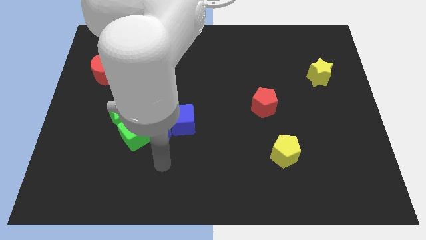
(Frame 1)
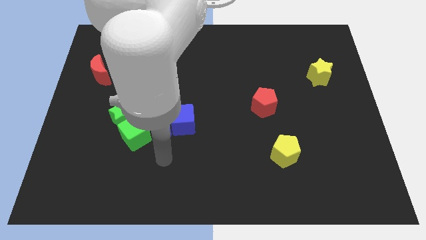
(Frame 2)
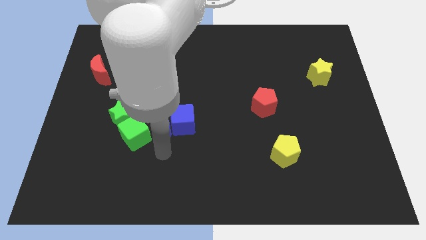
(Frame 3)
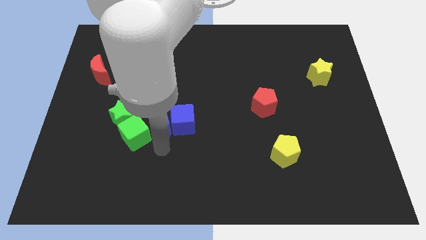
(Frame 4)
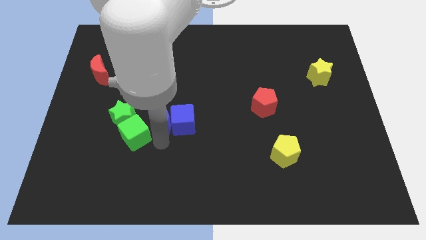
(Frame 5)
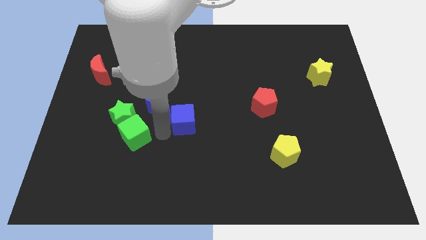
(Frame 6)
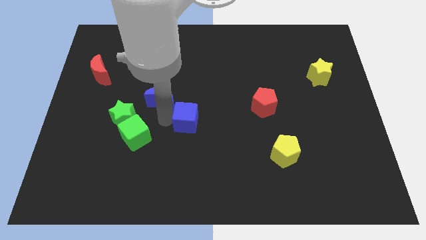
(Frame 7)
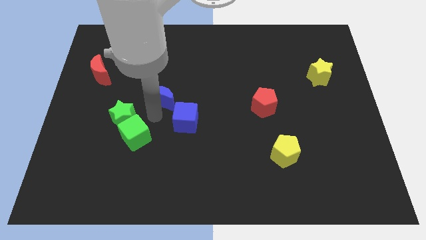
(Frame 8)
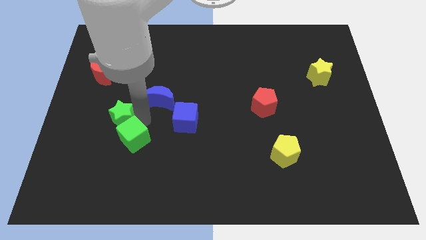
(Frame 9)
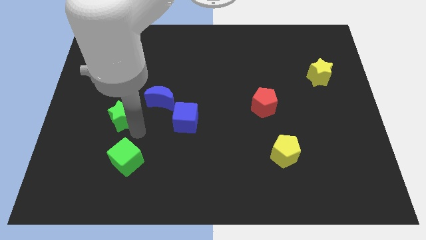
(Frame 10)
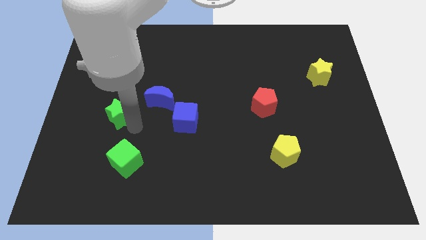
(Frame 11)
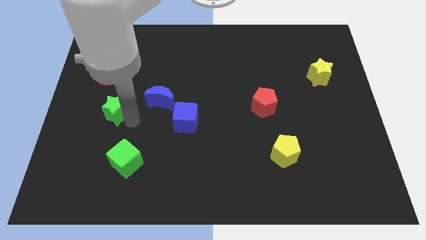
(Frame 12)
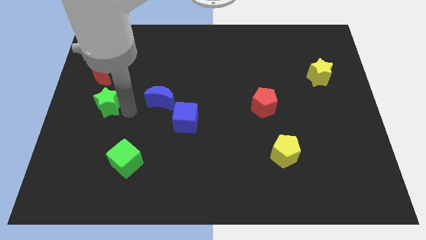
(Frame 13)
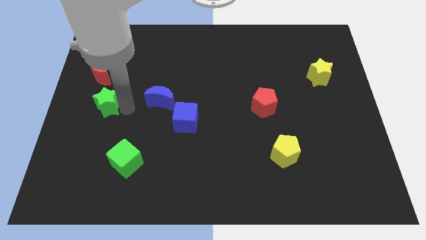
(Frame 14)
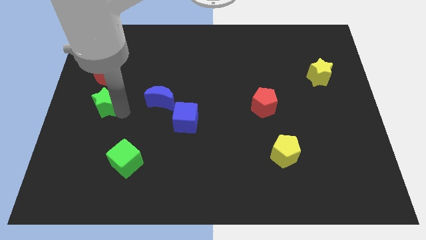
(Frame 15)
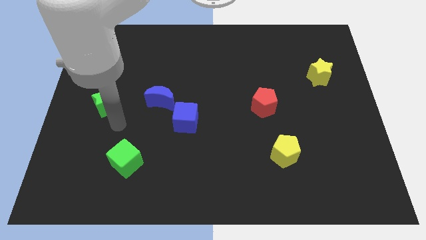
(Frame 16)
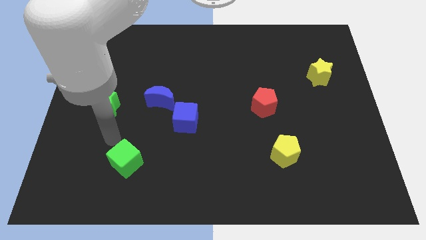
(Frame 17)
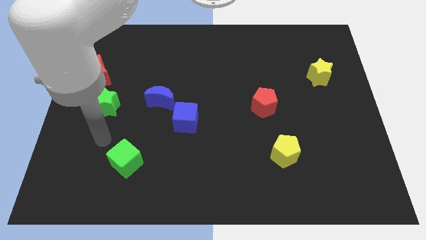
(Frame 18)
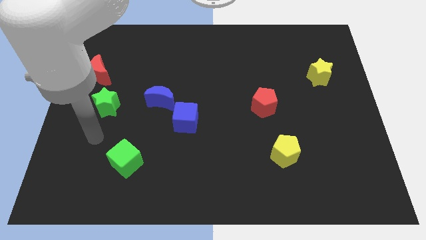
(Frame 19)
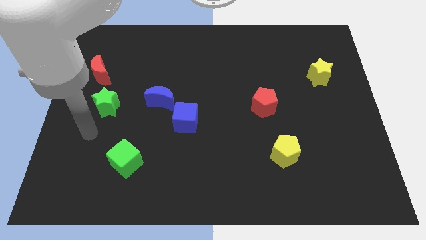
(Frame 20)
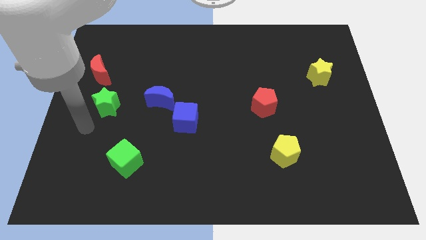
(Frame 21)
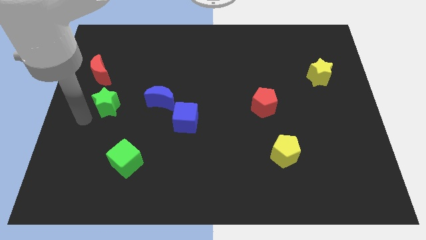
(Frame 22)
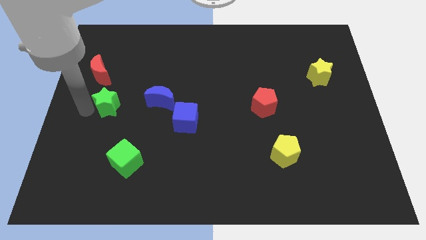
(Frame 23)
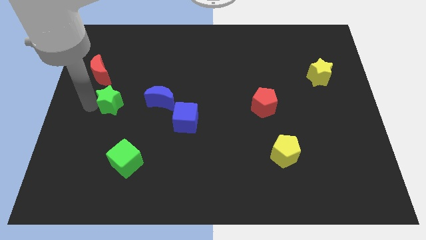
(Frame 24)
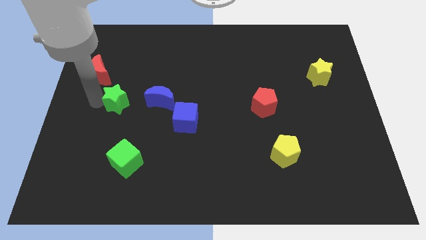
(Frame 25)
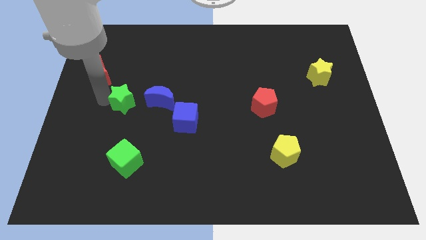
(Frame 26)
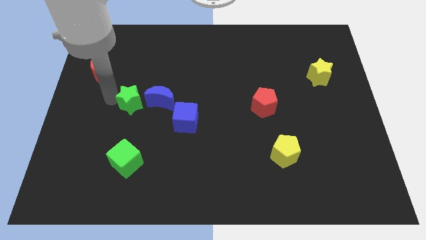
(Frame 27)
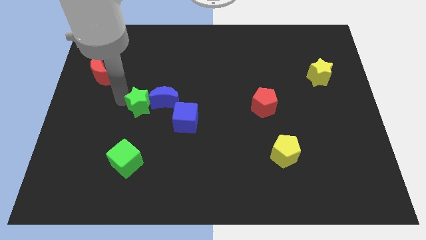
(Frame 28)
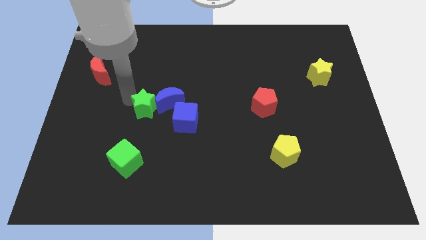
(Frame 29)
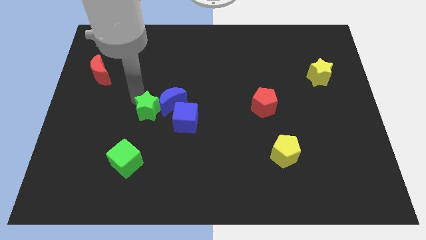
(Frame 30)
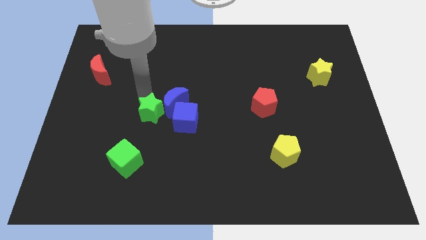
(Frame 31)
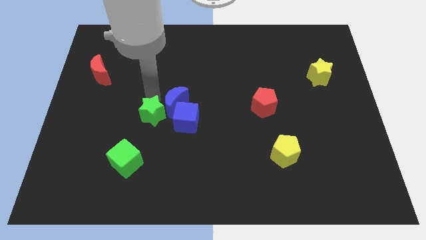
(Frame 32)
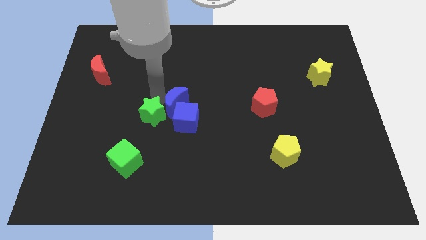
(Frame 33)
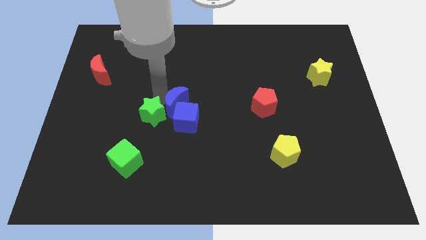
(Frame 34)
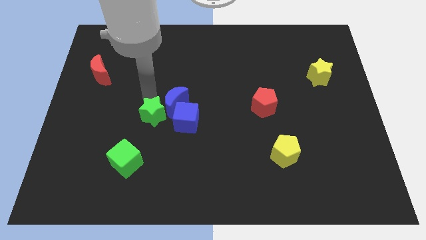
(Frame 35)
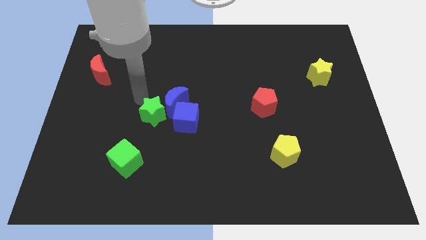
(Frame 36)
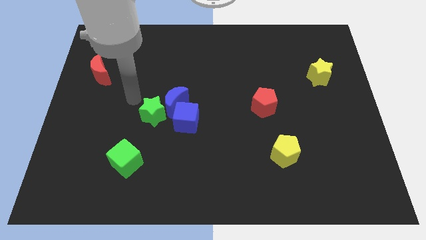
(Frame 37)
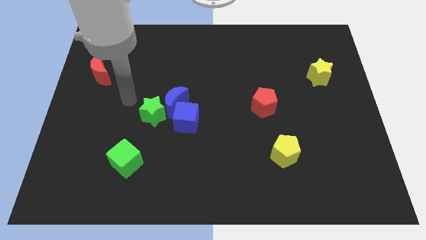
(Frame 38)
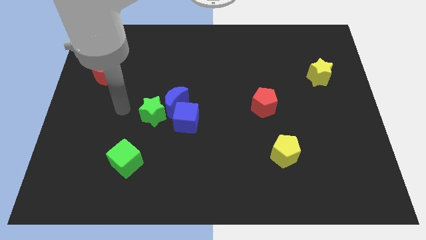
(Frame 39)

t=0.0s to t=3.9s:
separate the green blocks from each other

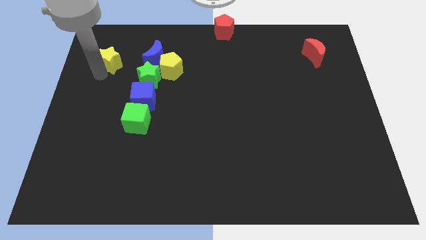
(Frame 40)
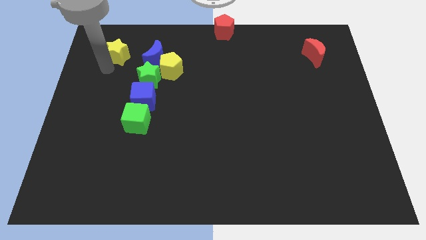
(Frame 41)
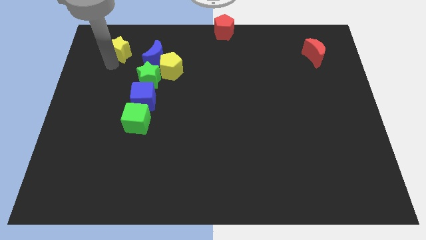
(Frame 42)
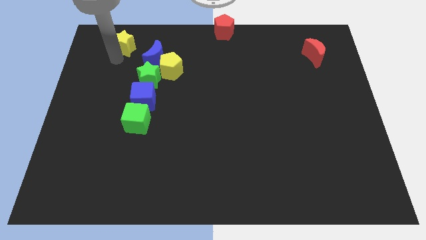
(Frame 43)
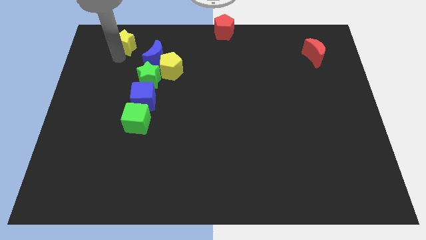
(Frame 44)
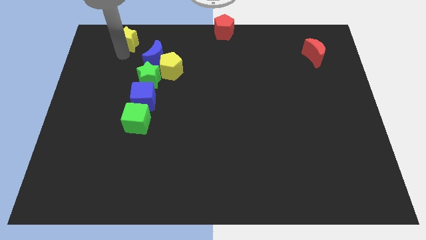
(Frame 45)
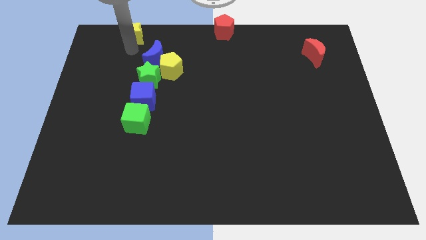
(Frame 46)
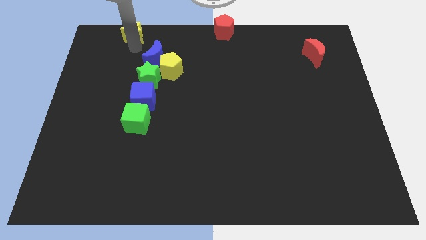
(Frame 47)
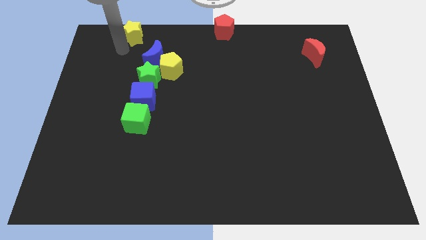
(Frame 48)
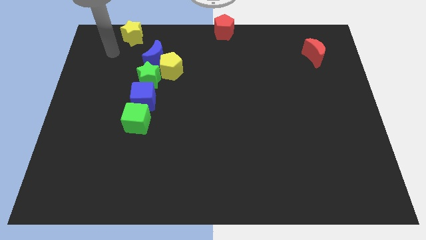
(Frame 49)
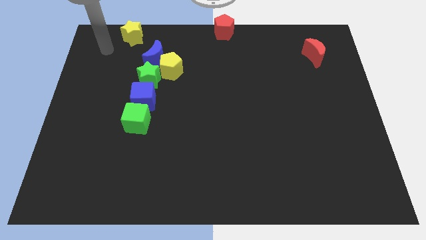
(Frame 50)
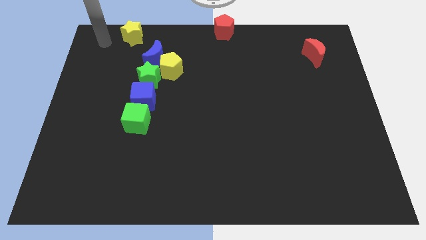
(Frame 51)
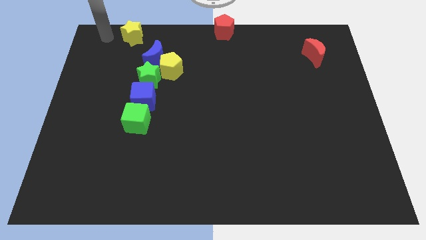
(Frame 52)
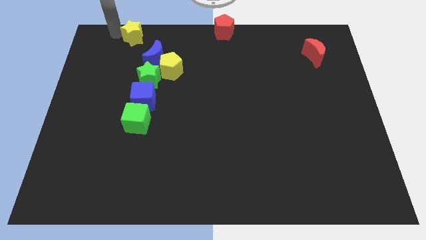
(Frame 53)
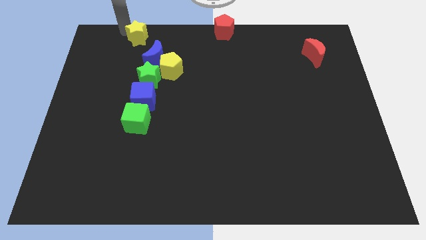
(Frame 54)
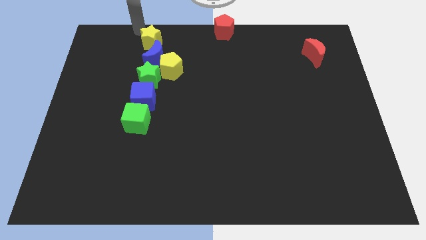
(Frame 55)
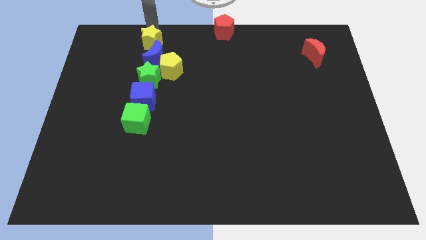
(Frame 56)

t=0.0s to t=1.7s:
move the yellow star to the top left side of the blue moon

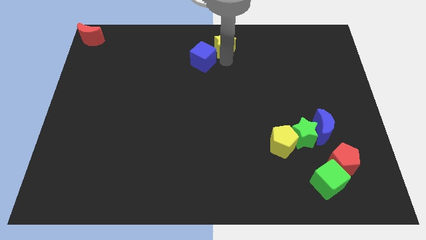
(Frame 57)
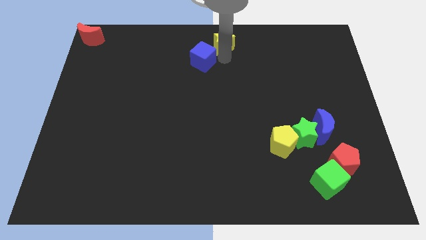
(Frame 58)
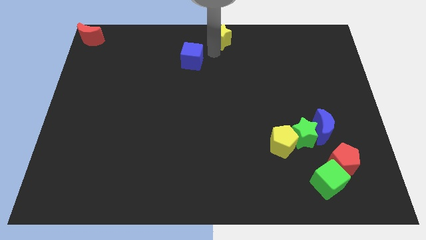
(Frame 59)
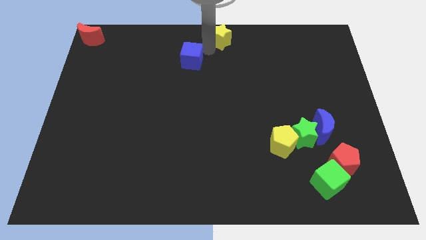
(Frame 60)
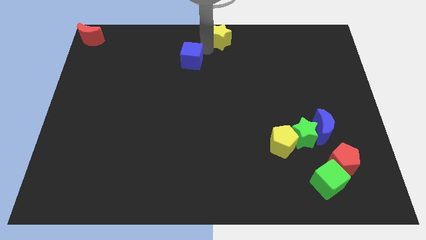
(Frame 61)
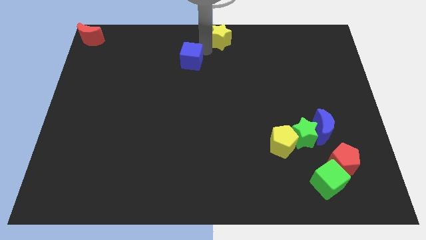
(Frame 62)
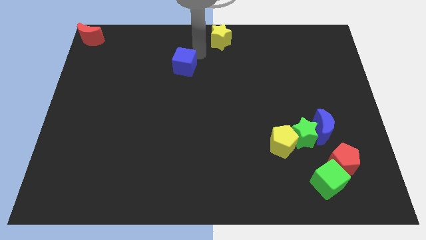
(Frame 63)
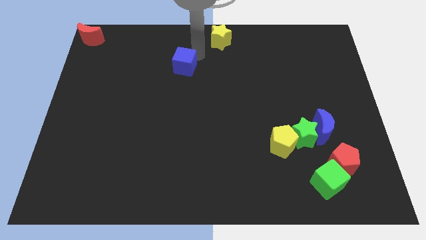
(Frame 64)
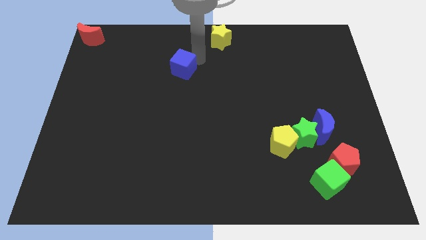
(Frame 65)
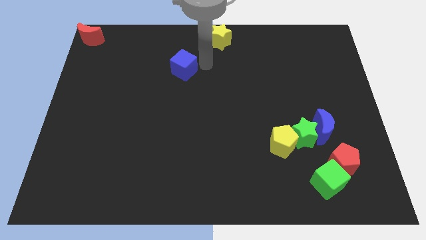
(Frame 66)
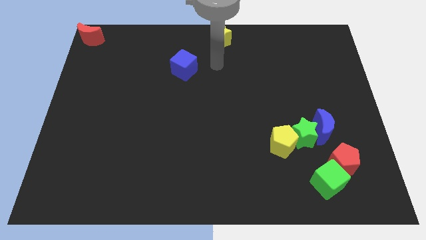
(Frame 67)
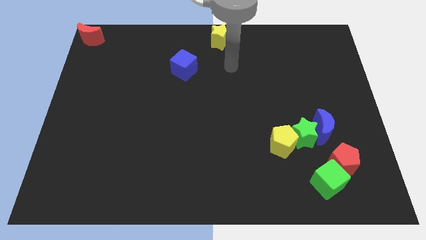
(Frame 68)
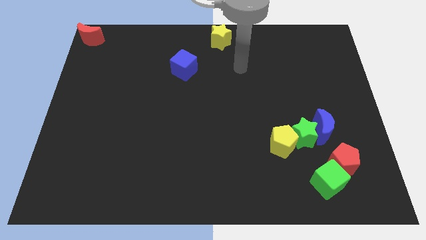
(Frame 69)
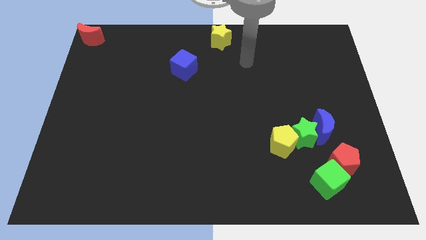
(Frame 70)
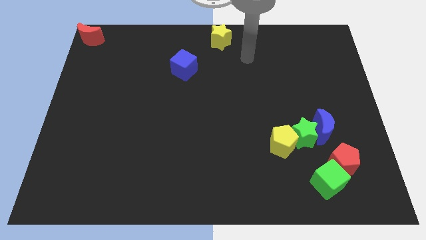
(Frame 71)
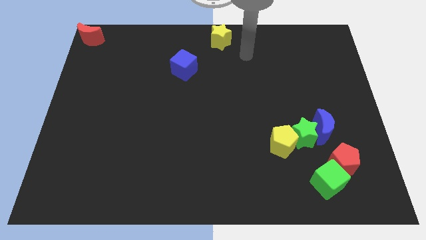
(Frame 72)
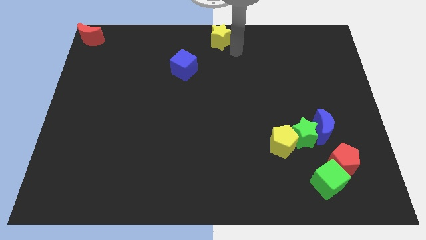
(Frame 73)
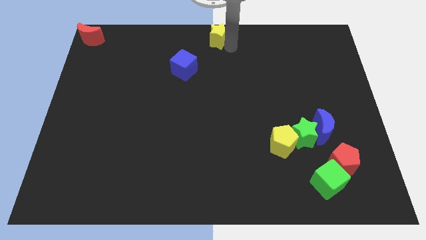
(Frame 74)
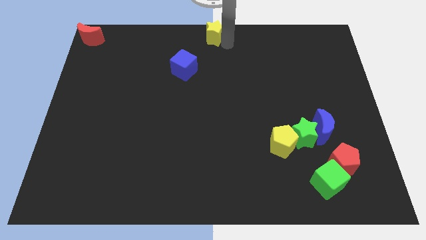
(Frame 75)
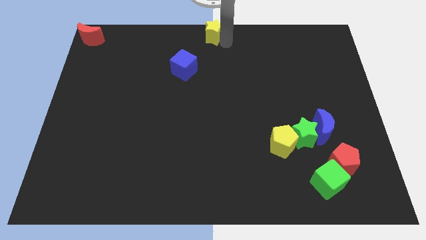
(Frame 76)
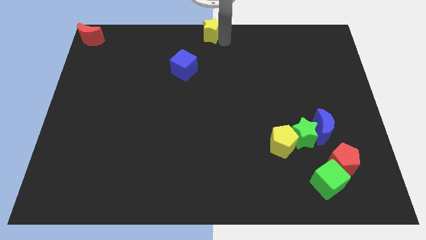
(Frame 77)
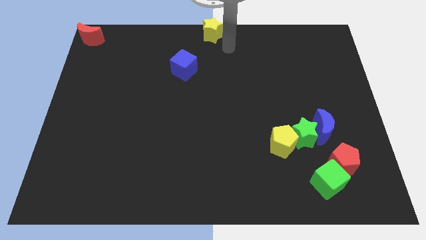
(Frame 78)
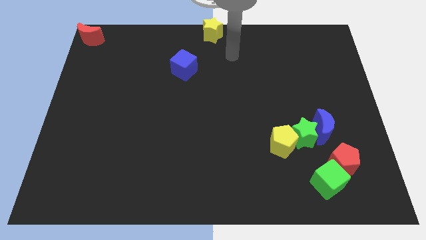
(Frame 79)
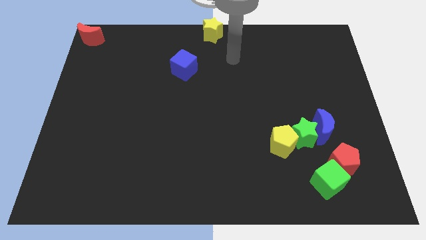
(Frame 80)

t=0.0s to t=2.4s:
separate blue cube from yellow star

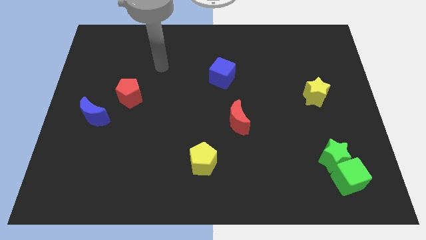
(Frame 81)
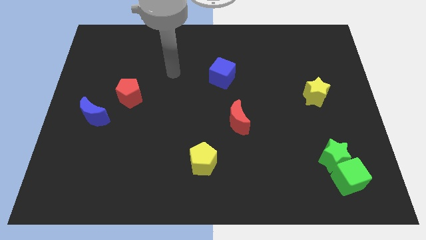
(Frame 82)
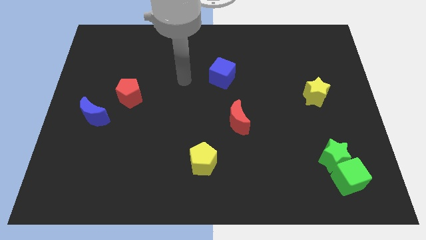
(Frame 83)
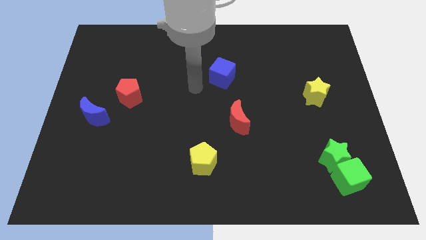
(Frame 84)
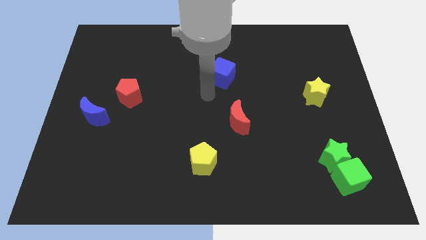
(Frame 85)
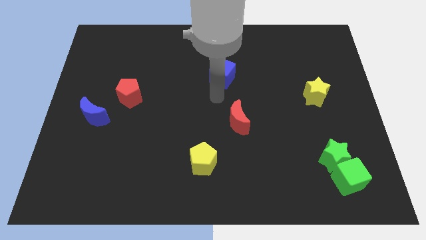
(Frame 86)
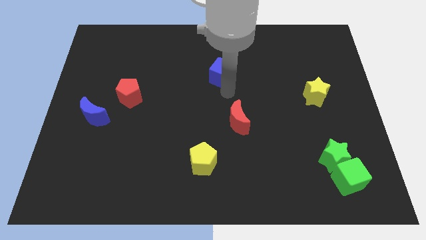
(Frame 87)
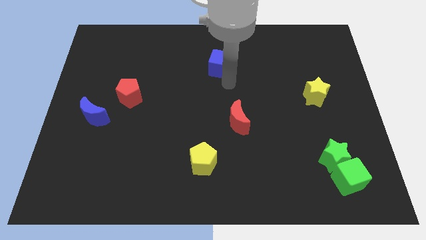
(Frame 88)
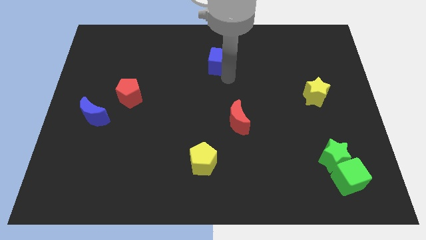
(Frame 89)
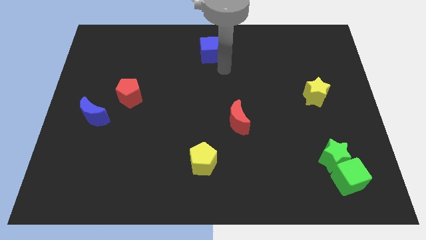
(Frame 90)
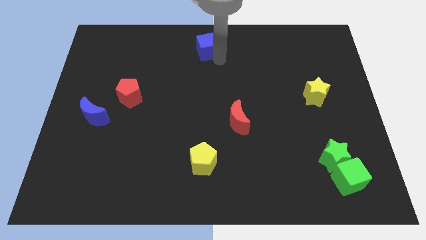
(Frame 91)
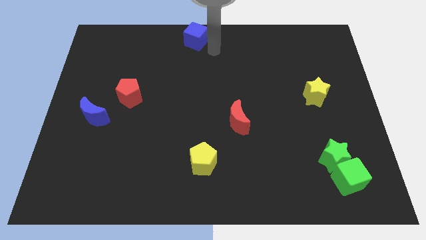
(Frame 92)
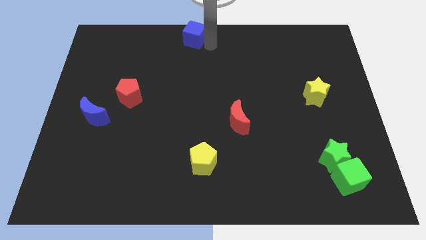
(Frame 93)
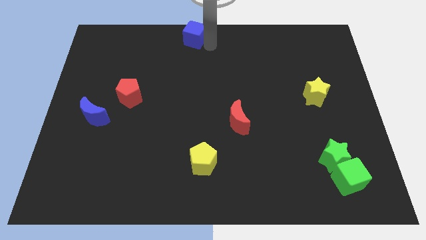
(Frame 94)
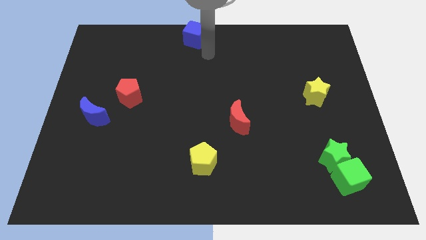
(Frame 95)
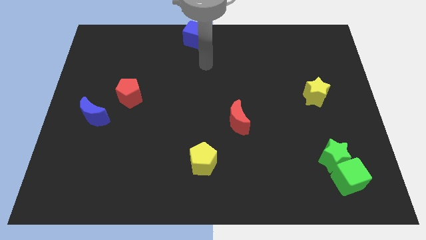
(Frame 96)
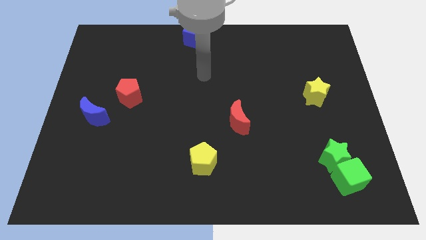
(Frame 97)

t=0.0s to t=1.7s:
move blue block to the top center of the board
